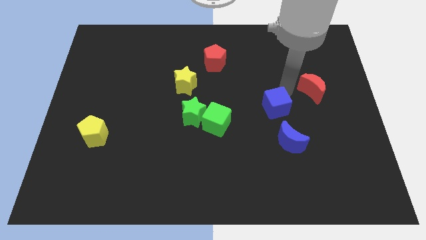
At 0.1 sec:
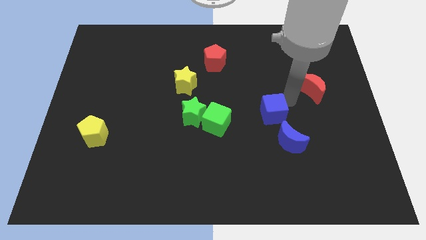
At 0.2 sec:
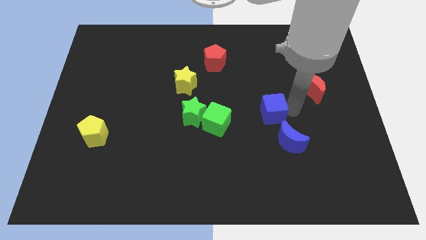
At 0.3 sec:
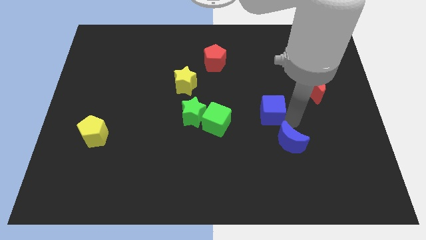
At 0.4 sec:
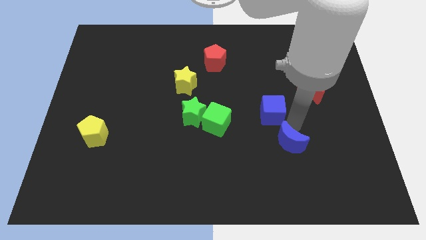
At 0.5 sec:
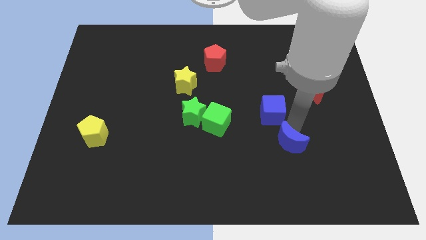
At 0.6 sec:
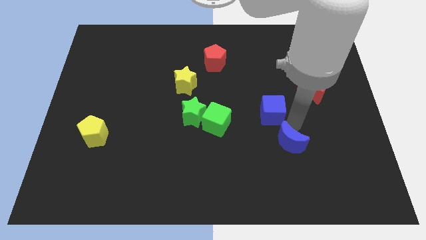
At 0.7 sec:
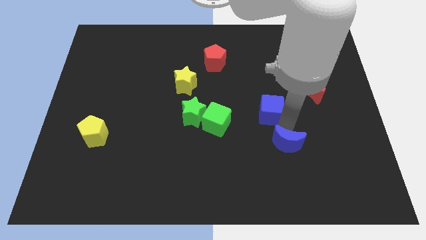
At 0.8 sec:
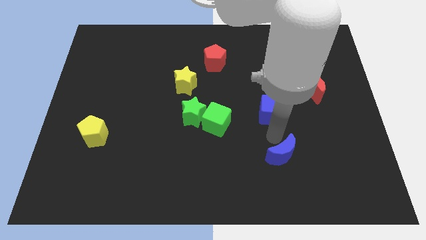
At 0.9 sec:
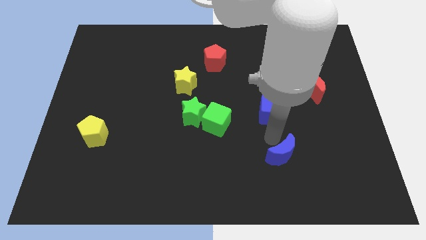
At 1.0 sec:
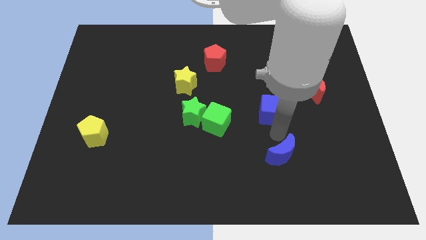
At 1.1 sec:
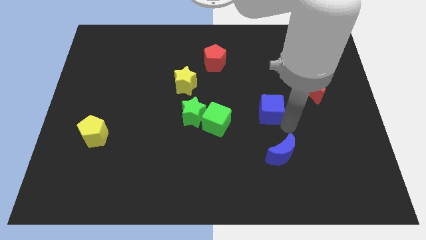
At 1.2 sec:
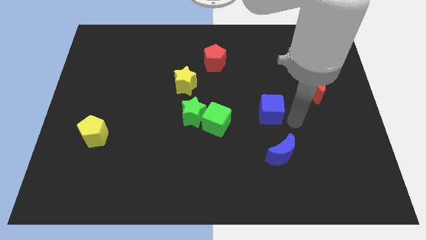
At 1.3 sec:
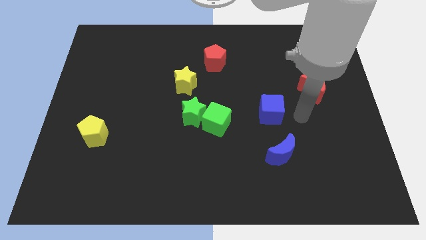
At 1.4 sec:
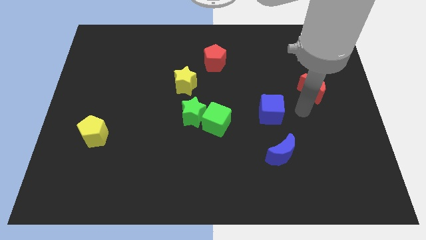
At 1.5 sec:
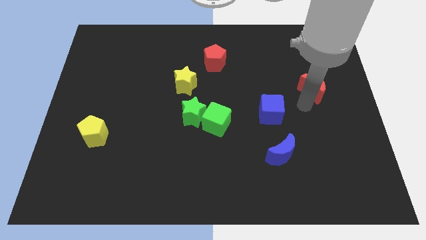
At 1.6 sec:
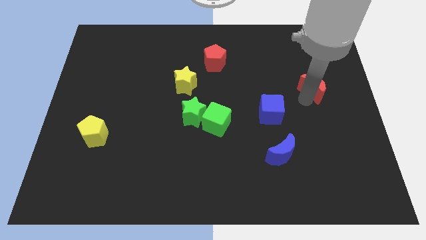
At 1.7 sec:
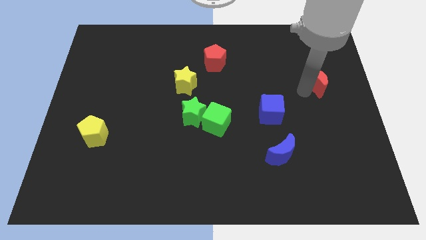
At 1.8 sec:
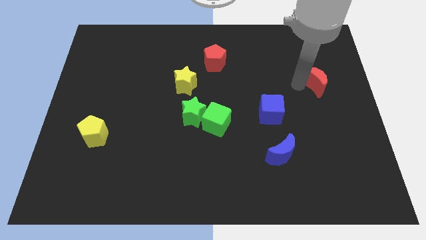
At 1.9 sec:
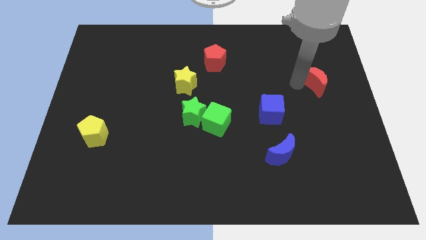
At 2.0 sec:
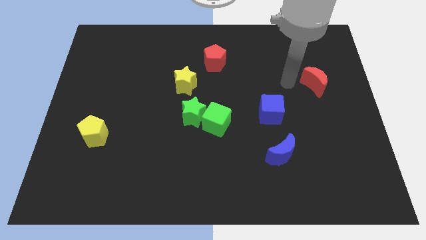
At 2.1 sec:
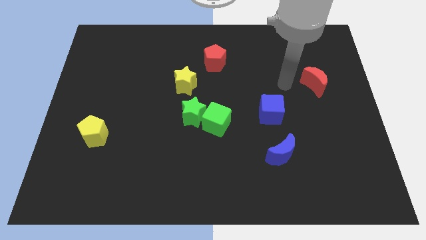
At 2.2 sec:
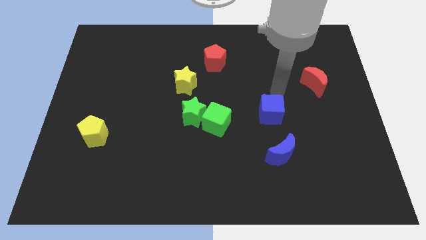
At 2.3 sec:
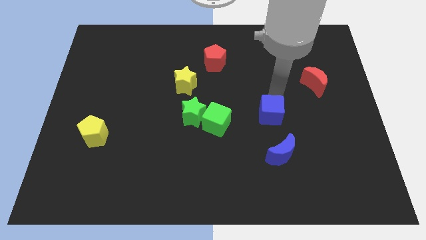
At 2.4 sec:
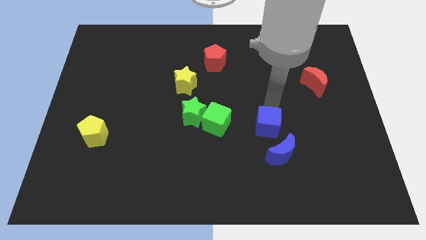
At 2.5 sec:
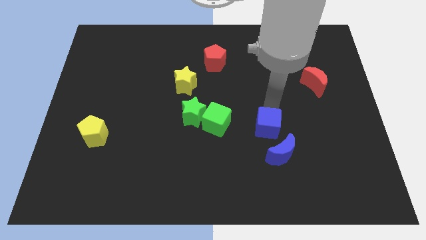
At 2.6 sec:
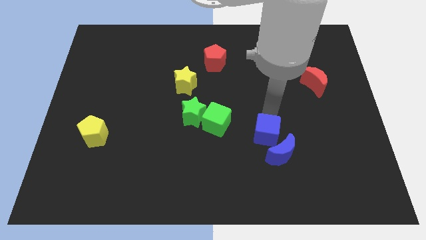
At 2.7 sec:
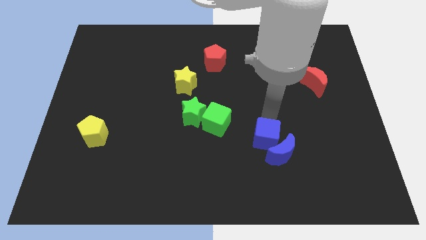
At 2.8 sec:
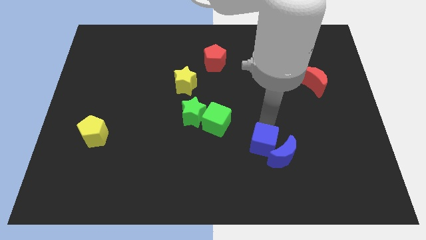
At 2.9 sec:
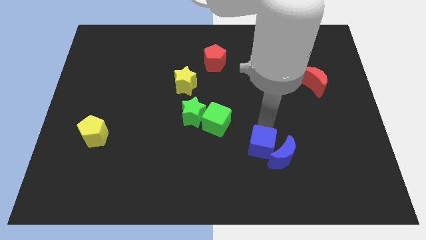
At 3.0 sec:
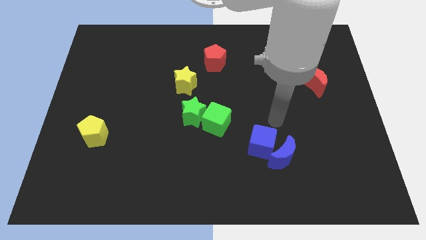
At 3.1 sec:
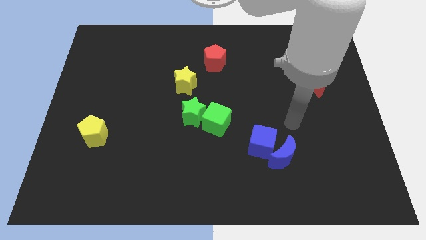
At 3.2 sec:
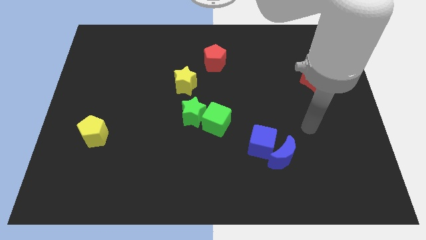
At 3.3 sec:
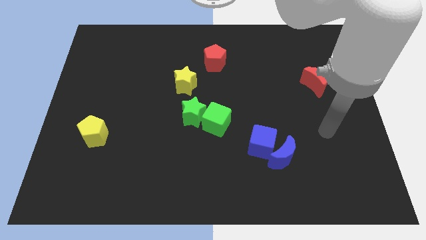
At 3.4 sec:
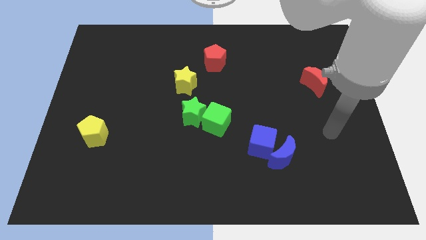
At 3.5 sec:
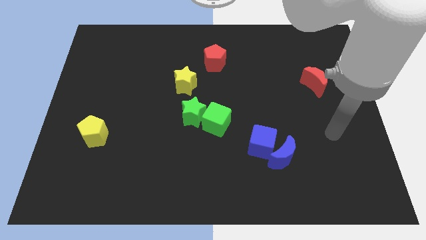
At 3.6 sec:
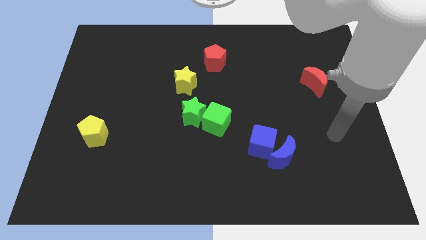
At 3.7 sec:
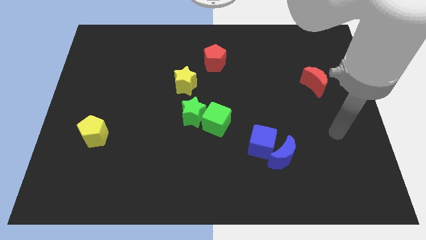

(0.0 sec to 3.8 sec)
move the blue cube into the blue crescent

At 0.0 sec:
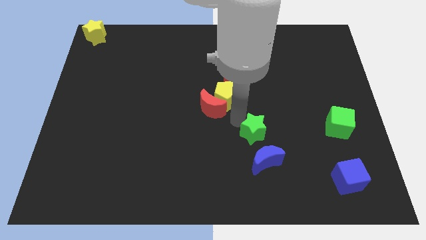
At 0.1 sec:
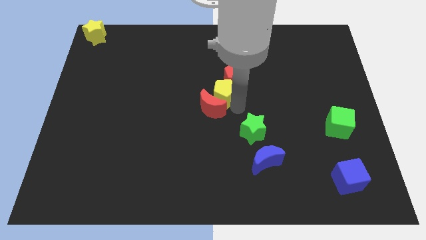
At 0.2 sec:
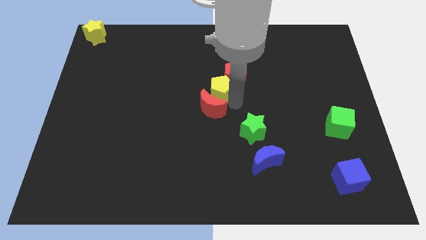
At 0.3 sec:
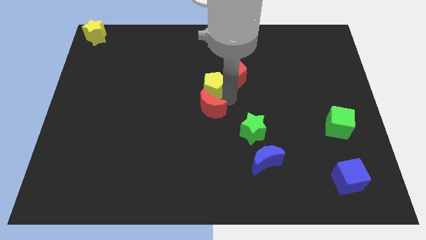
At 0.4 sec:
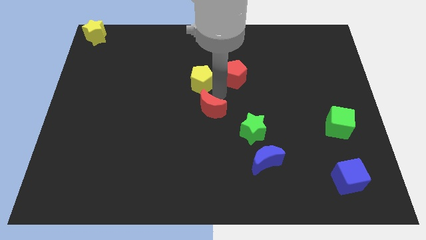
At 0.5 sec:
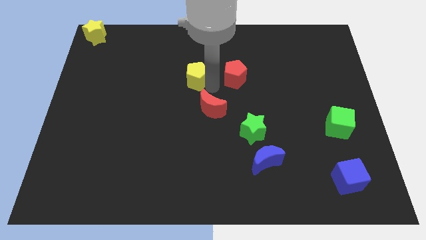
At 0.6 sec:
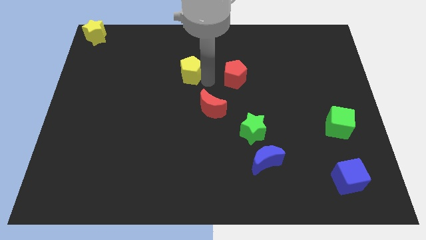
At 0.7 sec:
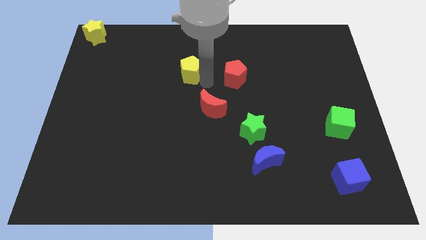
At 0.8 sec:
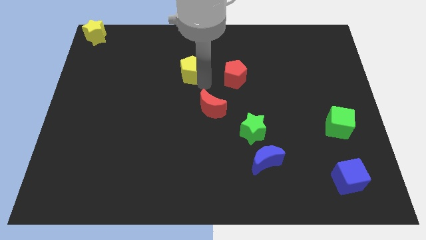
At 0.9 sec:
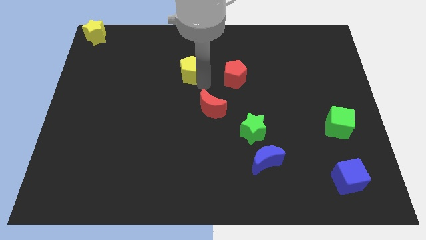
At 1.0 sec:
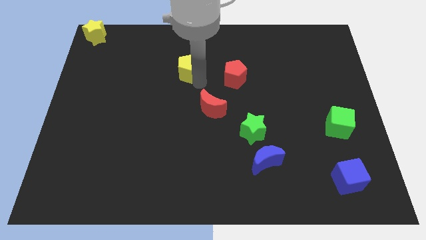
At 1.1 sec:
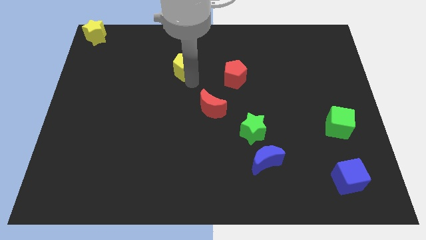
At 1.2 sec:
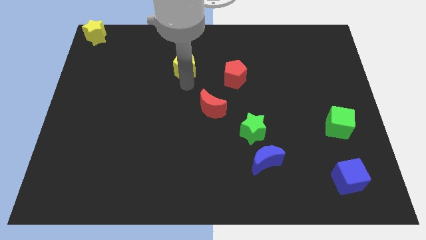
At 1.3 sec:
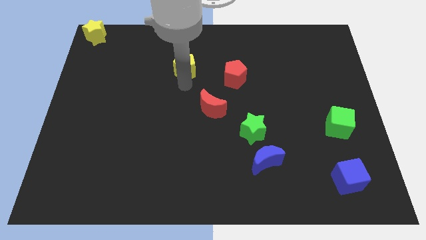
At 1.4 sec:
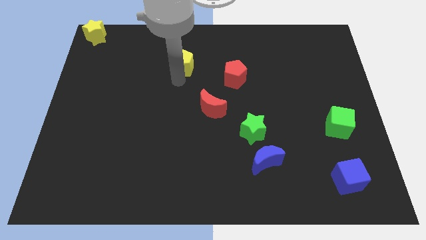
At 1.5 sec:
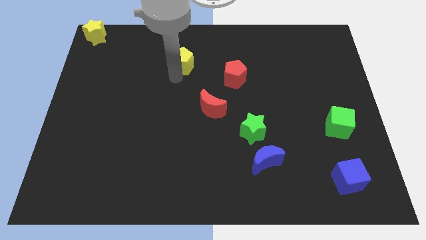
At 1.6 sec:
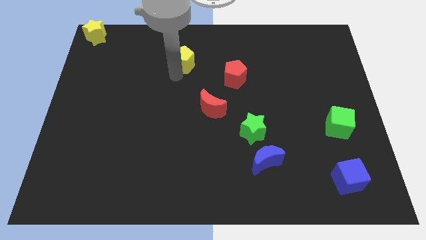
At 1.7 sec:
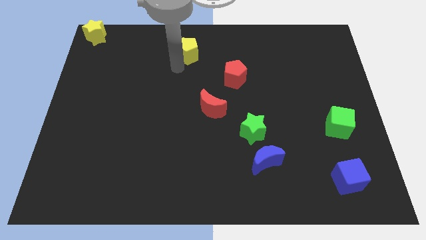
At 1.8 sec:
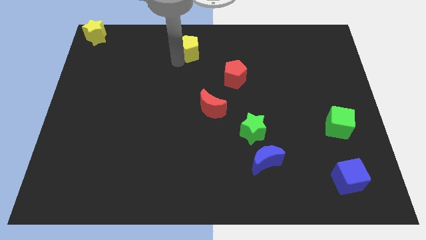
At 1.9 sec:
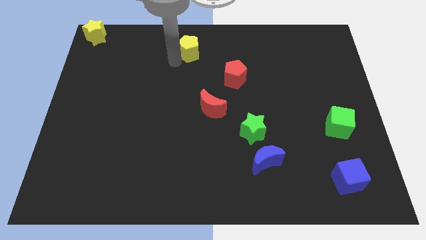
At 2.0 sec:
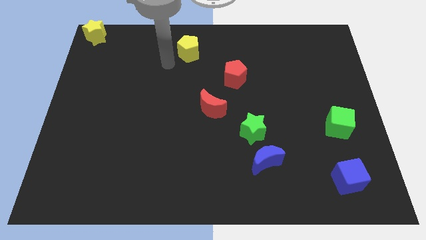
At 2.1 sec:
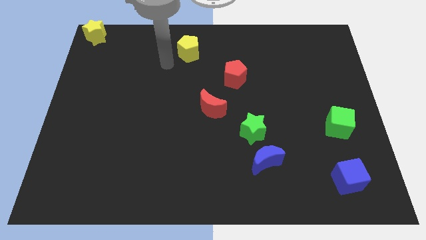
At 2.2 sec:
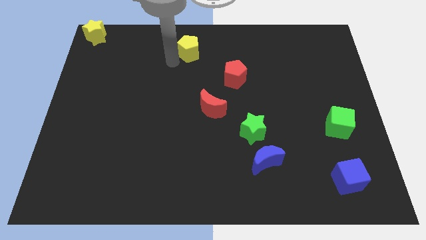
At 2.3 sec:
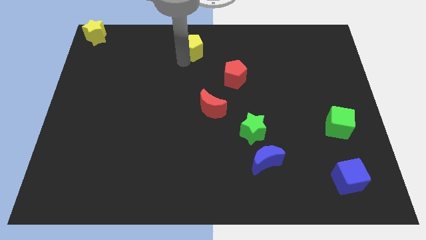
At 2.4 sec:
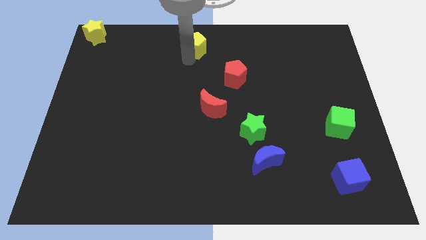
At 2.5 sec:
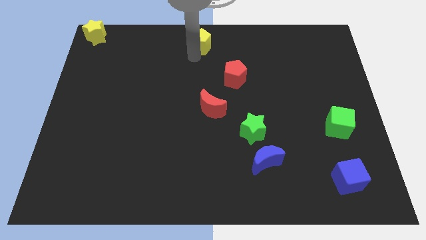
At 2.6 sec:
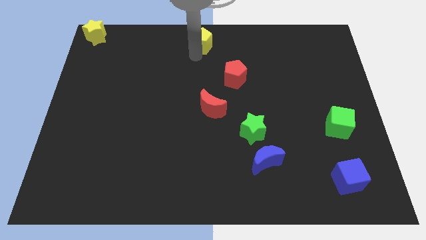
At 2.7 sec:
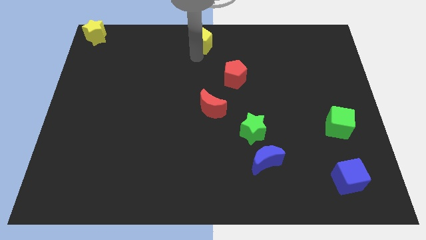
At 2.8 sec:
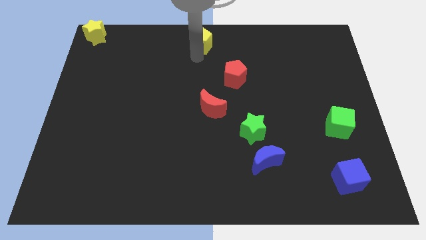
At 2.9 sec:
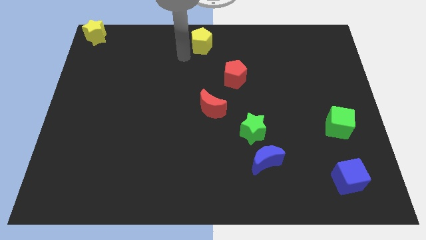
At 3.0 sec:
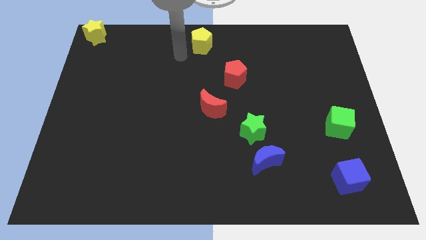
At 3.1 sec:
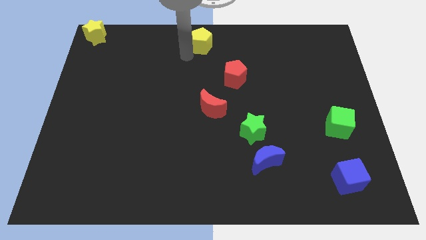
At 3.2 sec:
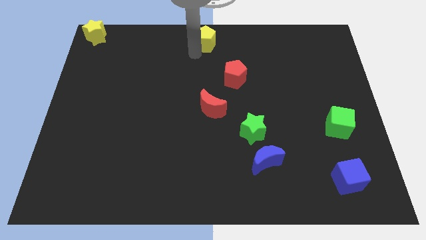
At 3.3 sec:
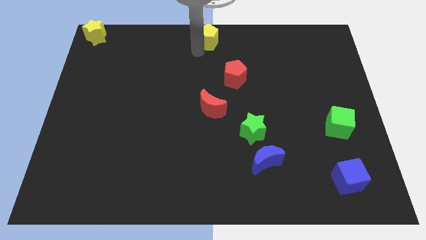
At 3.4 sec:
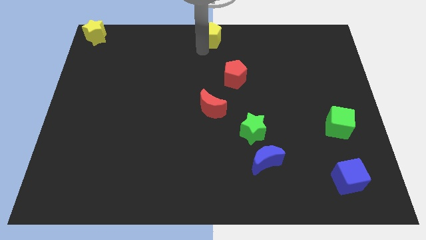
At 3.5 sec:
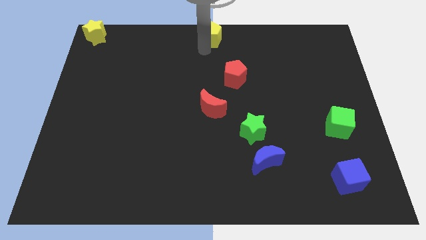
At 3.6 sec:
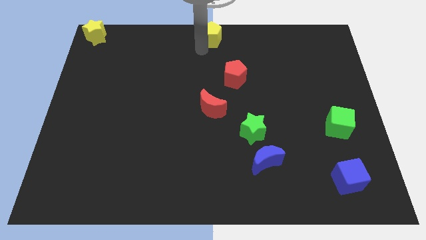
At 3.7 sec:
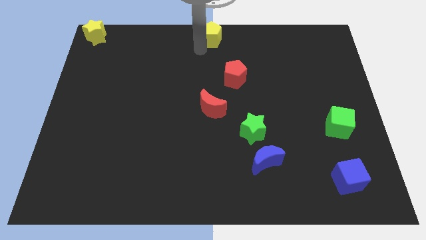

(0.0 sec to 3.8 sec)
put the yellow pentagon vertically at the top side of the red moon

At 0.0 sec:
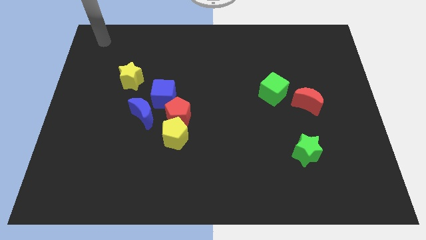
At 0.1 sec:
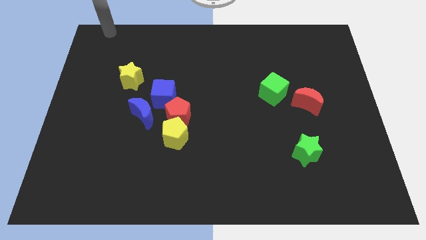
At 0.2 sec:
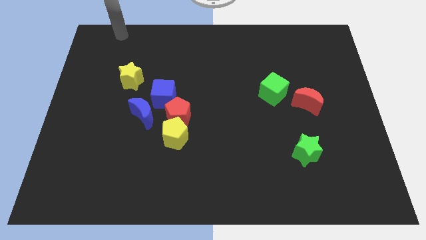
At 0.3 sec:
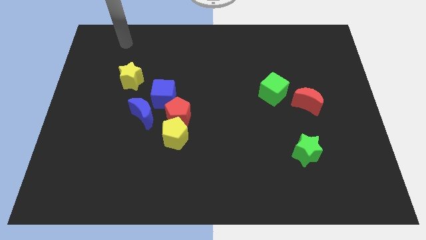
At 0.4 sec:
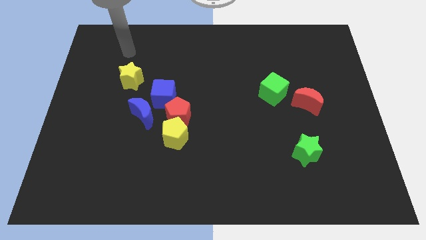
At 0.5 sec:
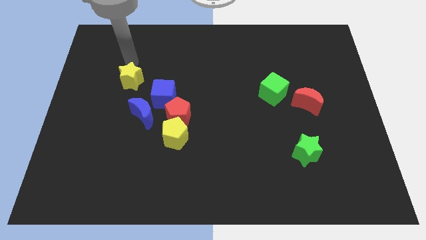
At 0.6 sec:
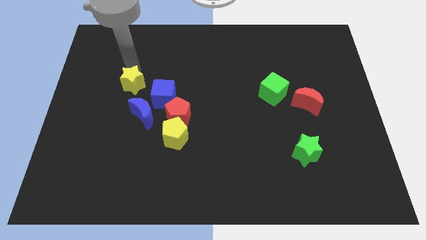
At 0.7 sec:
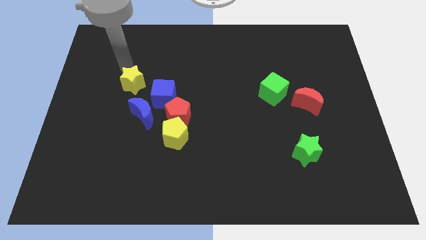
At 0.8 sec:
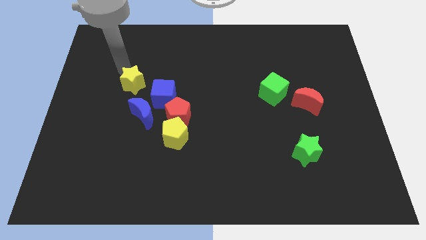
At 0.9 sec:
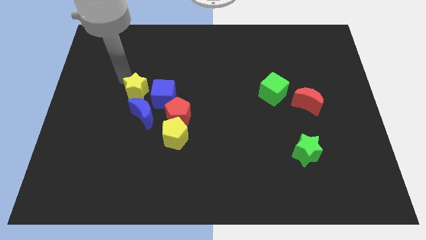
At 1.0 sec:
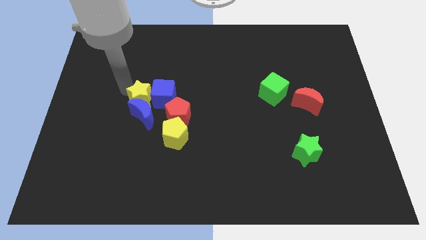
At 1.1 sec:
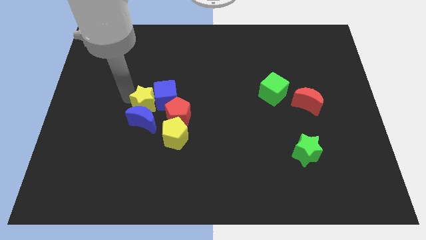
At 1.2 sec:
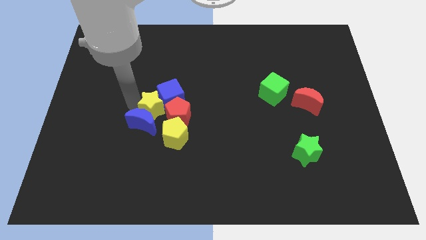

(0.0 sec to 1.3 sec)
place the yellow star between blue blocks
